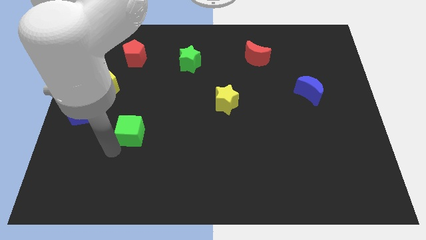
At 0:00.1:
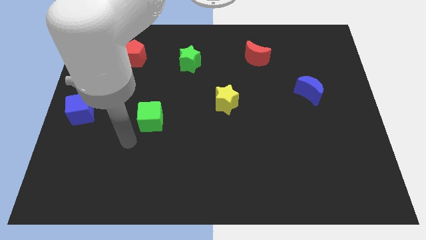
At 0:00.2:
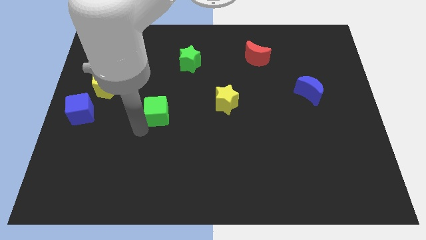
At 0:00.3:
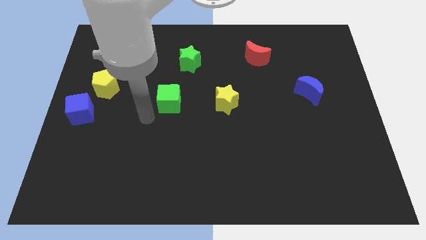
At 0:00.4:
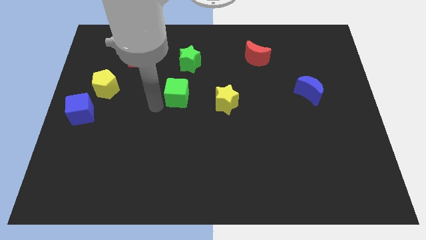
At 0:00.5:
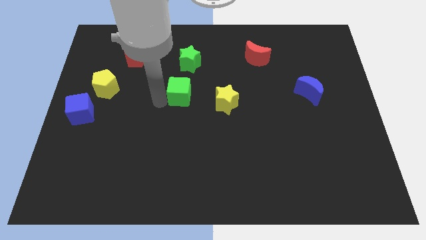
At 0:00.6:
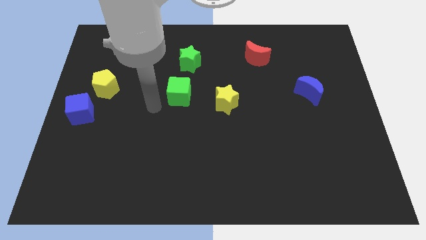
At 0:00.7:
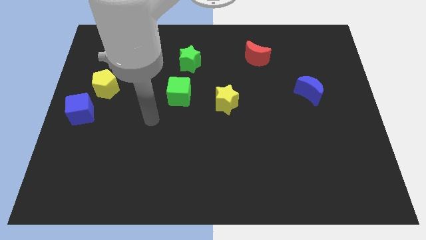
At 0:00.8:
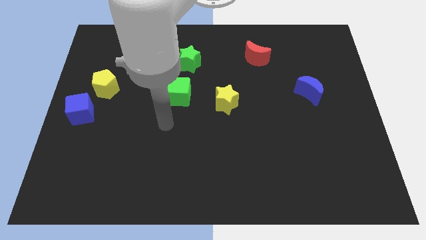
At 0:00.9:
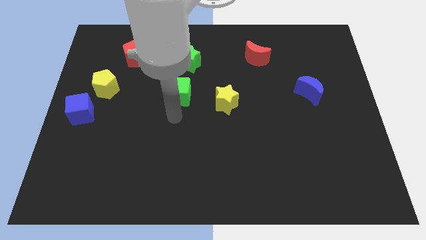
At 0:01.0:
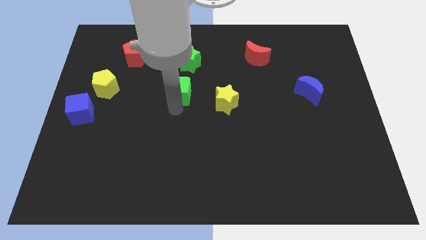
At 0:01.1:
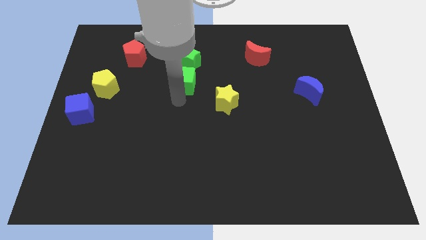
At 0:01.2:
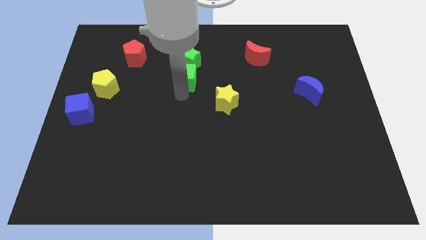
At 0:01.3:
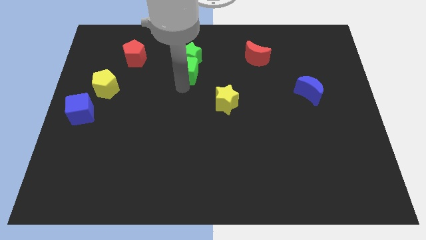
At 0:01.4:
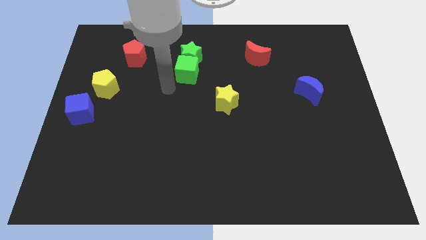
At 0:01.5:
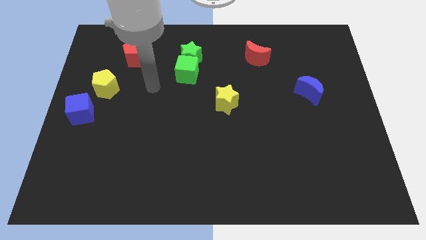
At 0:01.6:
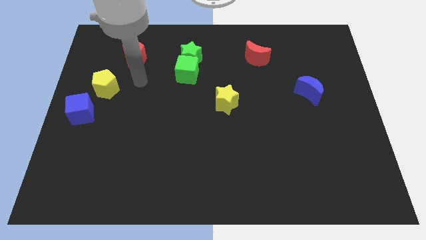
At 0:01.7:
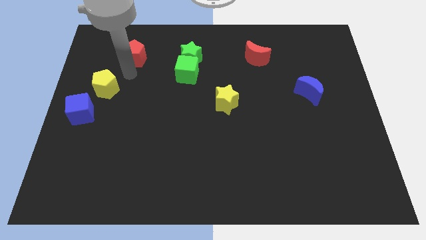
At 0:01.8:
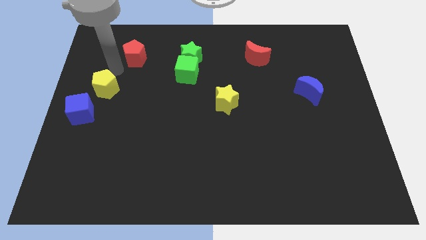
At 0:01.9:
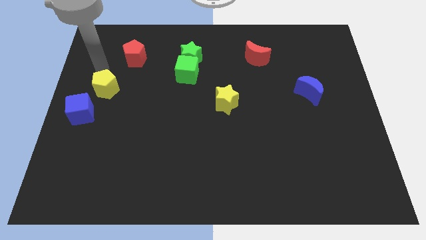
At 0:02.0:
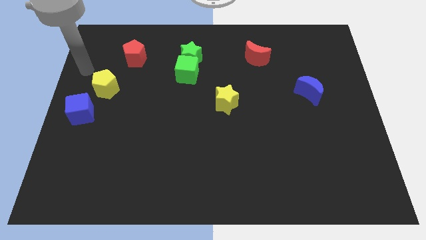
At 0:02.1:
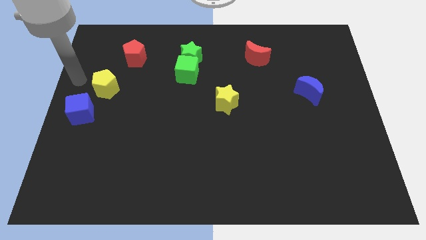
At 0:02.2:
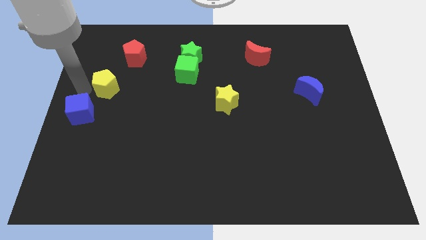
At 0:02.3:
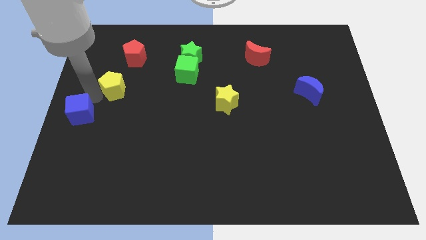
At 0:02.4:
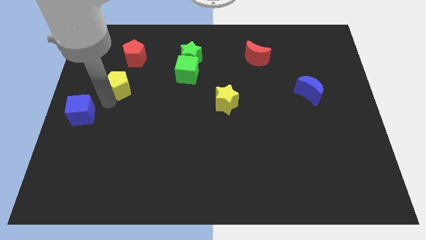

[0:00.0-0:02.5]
push the green blocks towards the top side of the board

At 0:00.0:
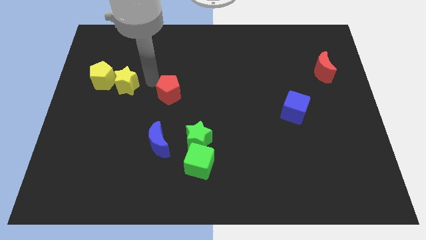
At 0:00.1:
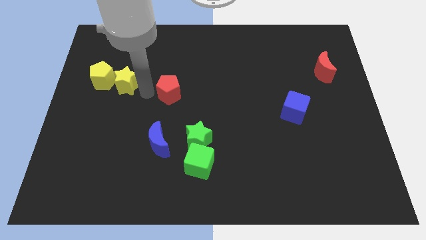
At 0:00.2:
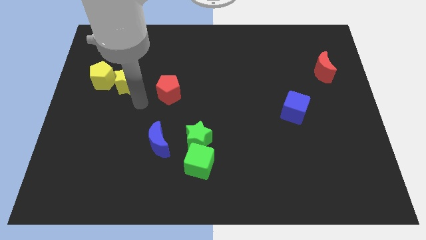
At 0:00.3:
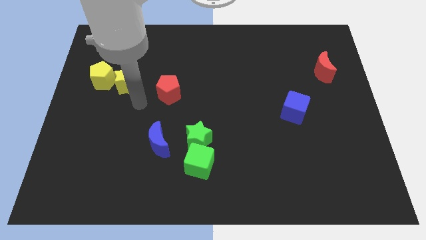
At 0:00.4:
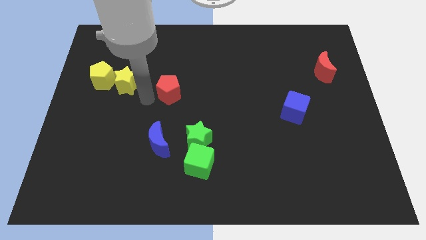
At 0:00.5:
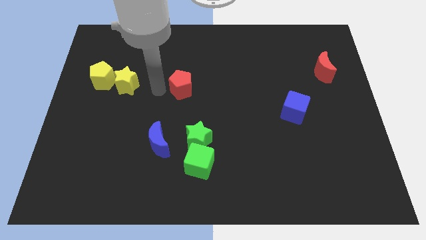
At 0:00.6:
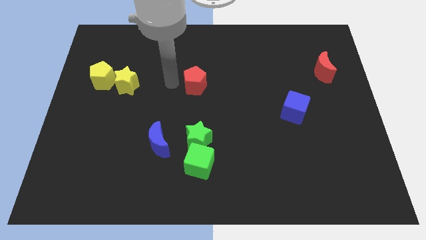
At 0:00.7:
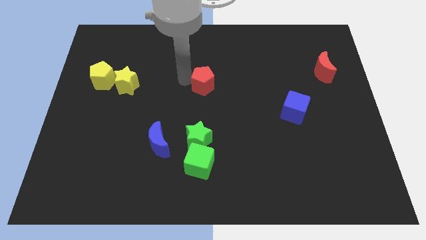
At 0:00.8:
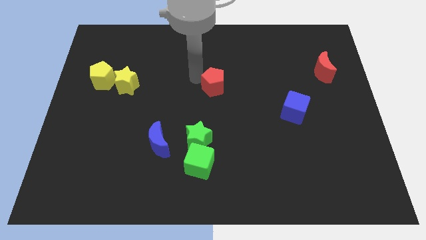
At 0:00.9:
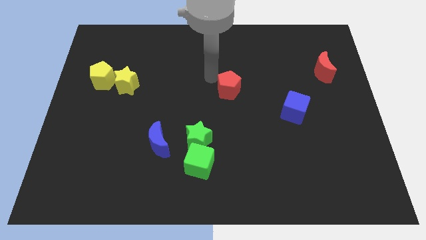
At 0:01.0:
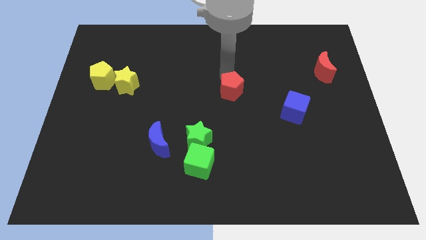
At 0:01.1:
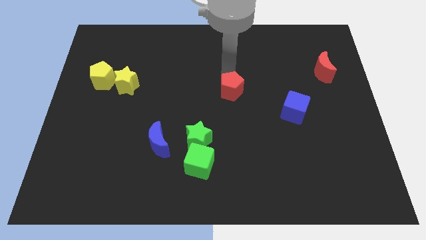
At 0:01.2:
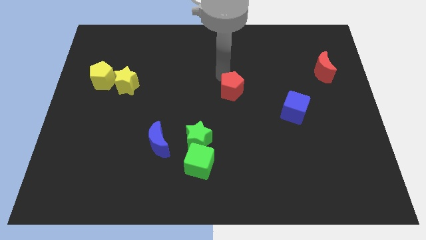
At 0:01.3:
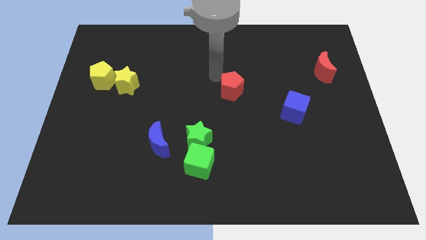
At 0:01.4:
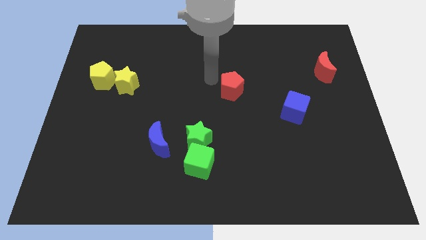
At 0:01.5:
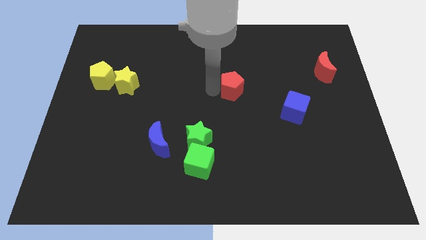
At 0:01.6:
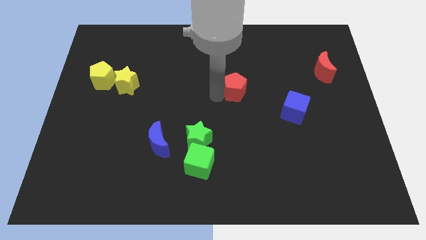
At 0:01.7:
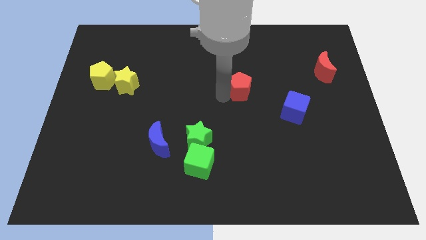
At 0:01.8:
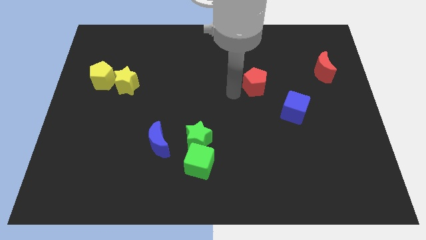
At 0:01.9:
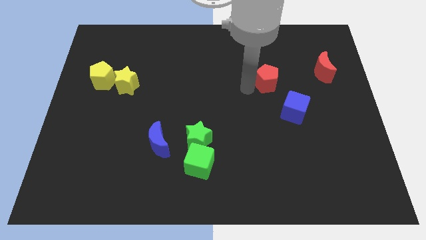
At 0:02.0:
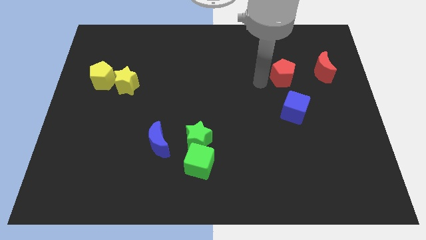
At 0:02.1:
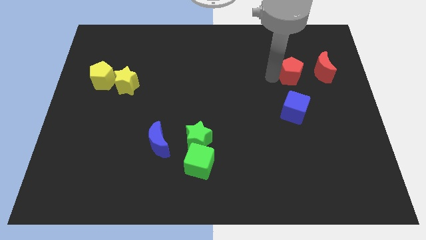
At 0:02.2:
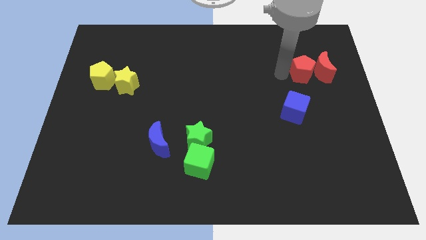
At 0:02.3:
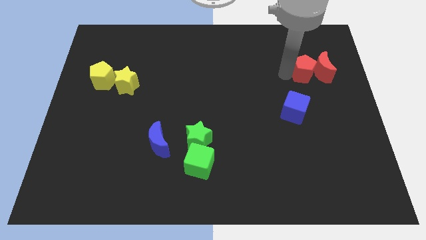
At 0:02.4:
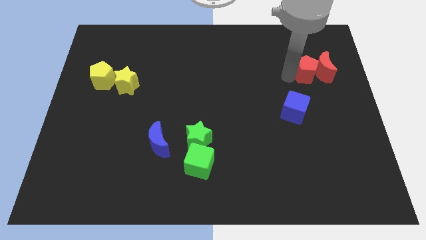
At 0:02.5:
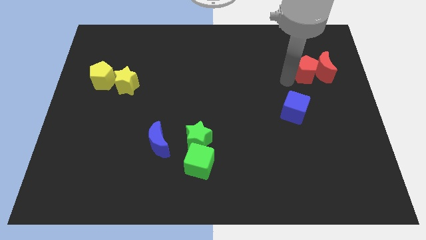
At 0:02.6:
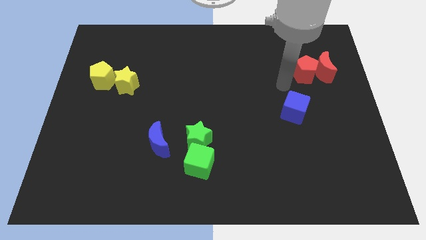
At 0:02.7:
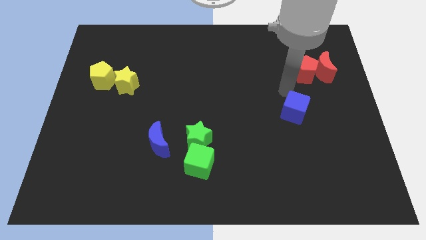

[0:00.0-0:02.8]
push the red pentagon close to the left side of the red moon

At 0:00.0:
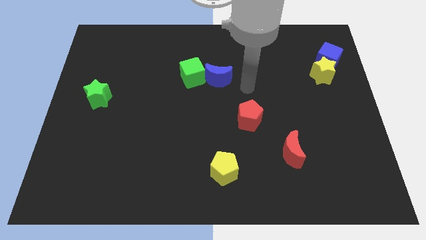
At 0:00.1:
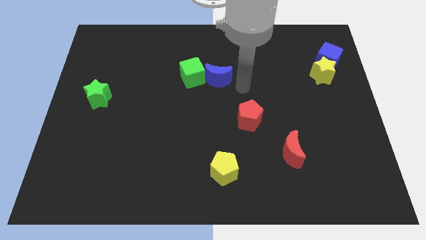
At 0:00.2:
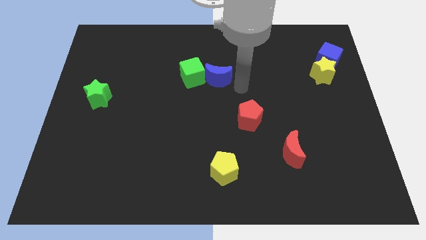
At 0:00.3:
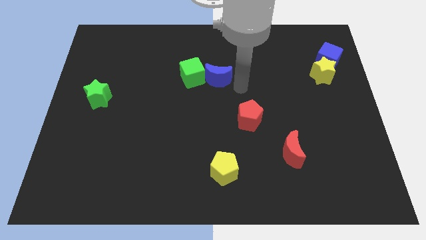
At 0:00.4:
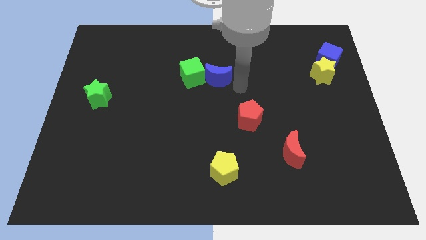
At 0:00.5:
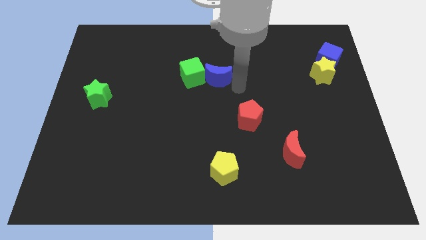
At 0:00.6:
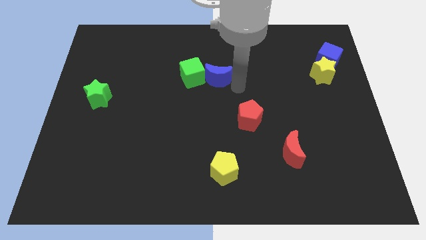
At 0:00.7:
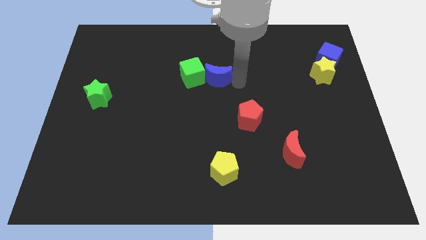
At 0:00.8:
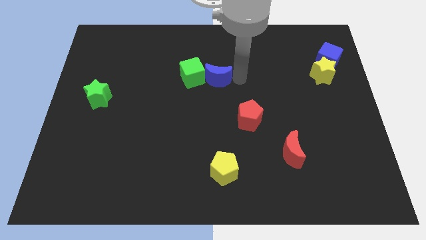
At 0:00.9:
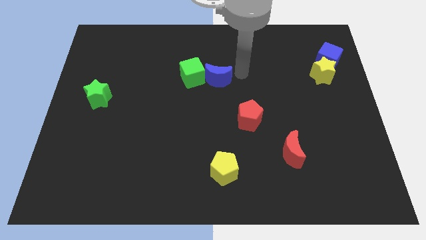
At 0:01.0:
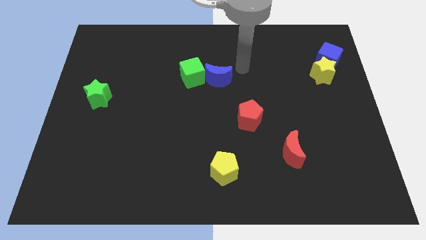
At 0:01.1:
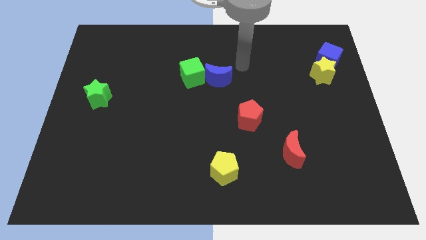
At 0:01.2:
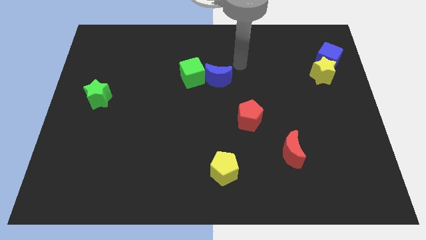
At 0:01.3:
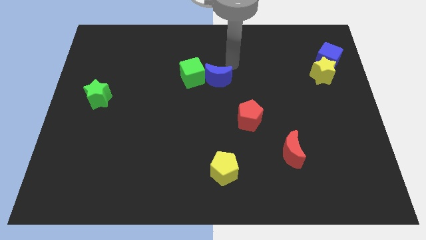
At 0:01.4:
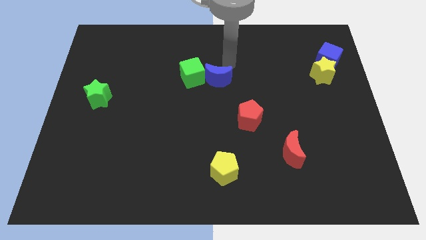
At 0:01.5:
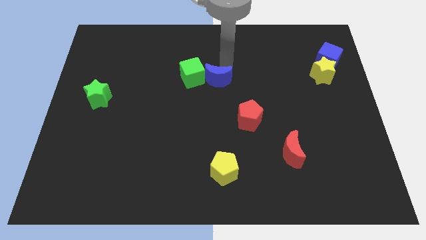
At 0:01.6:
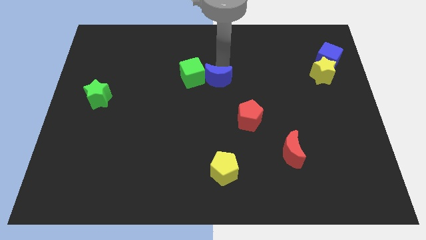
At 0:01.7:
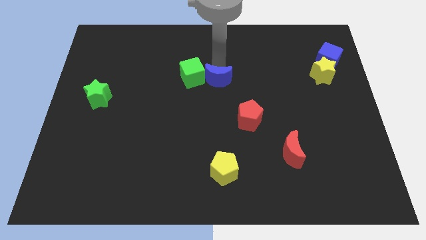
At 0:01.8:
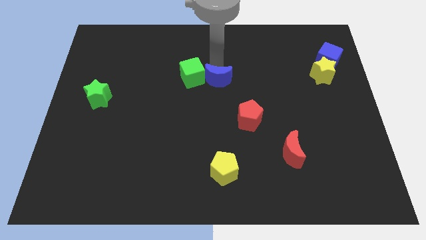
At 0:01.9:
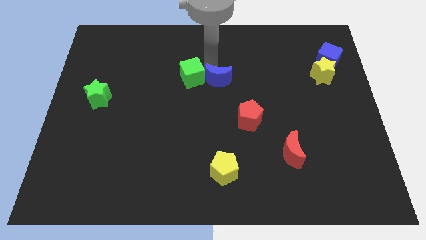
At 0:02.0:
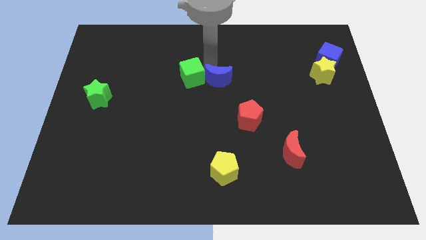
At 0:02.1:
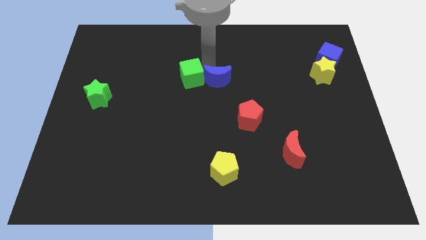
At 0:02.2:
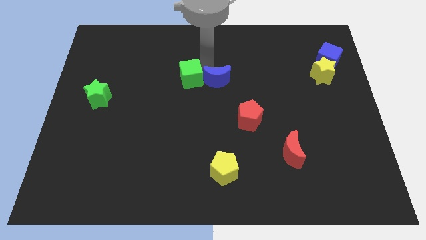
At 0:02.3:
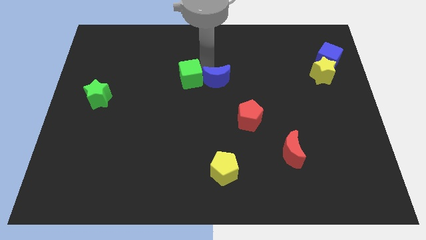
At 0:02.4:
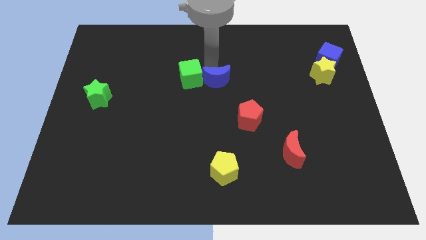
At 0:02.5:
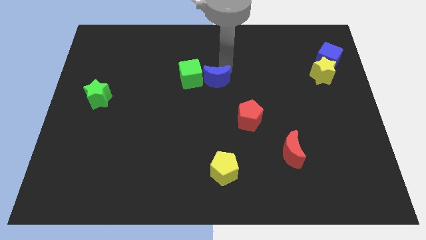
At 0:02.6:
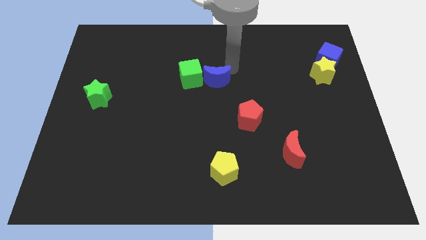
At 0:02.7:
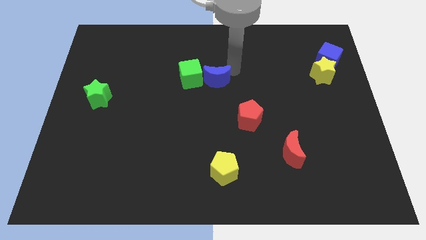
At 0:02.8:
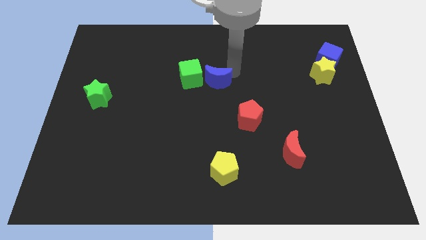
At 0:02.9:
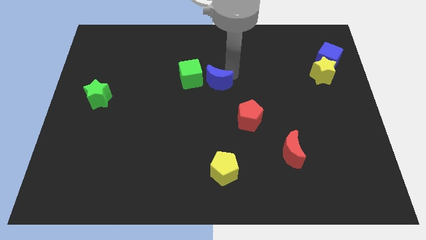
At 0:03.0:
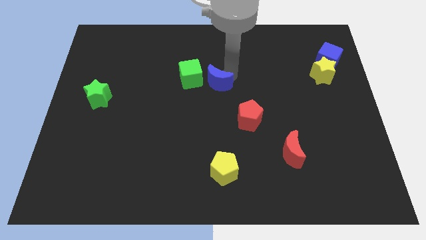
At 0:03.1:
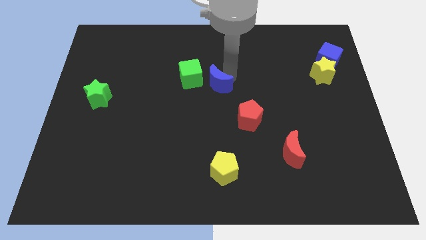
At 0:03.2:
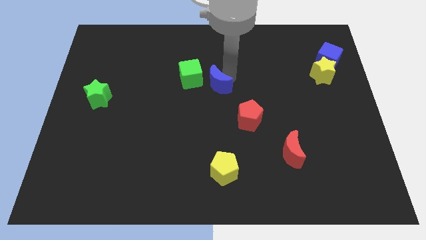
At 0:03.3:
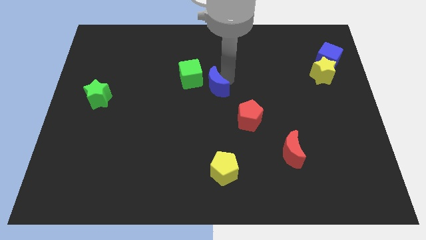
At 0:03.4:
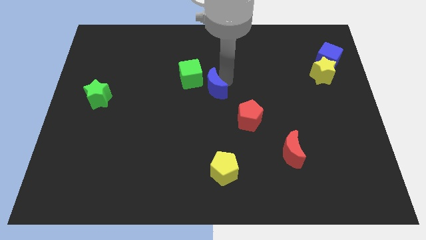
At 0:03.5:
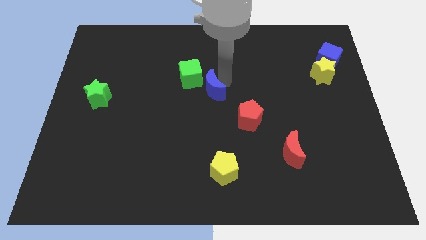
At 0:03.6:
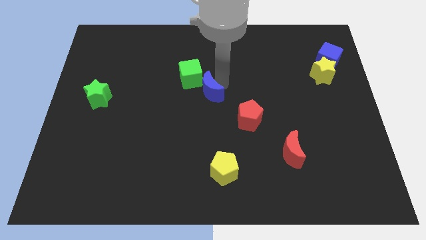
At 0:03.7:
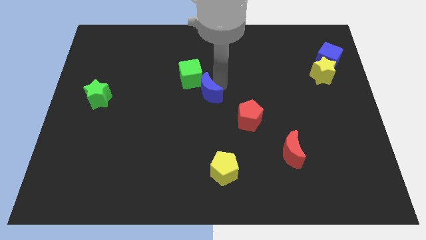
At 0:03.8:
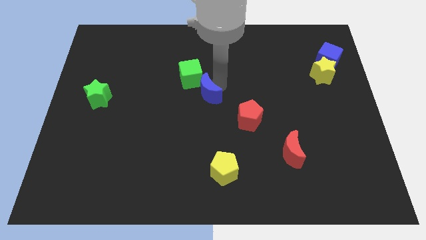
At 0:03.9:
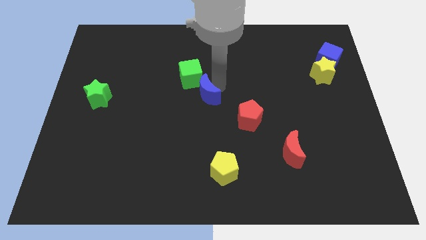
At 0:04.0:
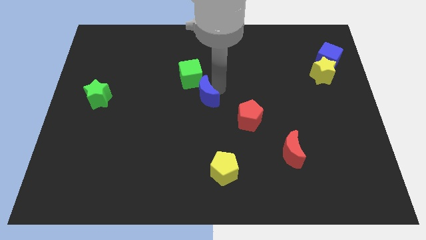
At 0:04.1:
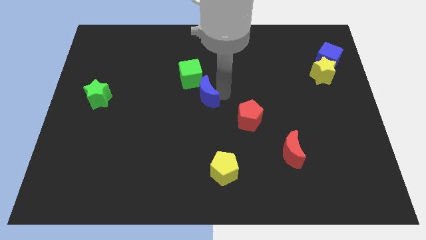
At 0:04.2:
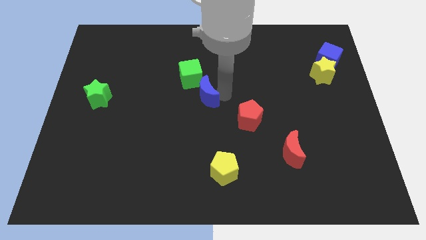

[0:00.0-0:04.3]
place blue crescent below the right side of the green cube
